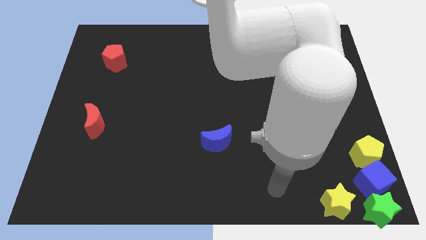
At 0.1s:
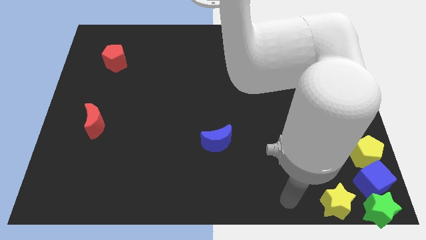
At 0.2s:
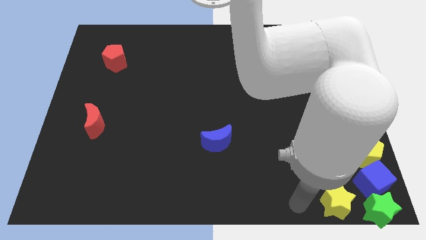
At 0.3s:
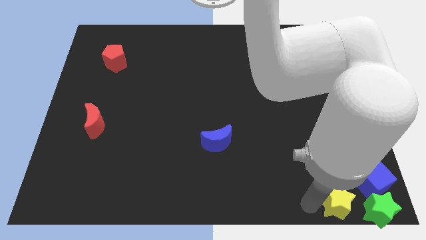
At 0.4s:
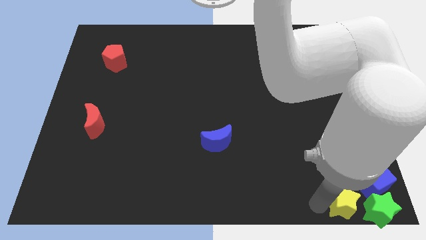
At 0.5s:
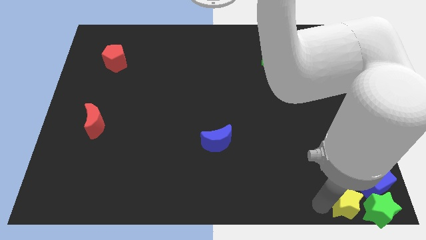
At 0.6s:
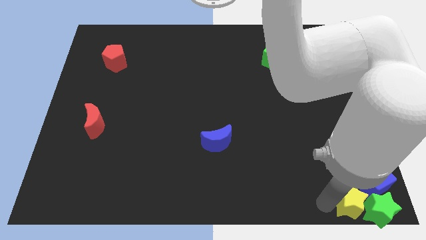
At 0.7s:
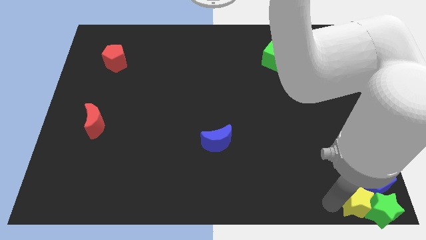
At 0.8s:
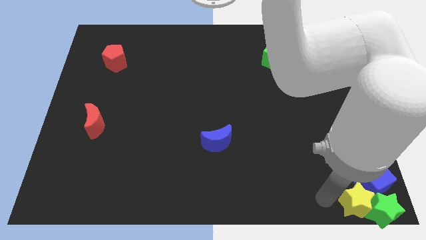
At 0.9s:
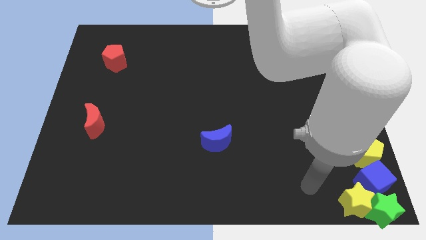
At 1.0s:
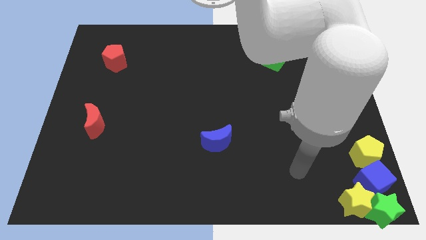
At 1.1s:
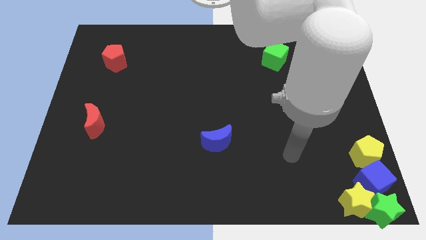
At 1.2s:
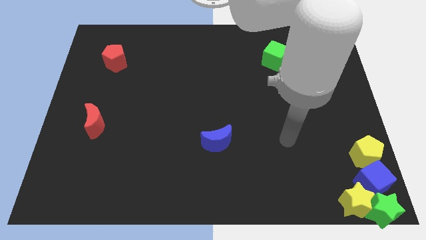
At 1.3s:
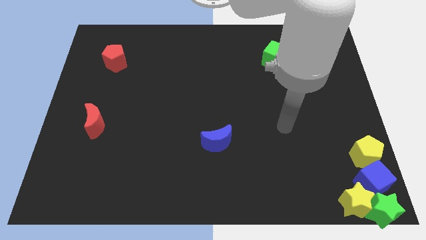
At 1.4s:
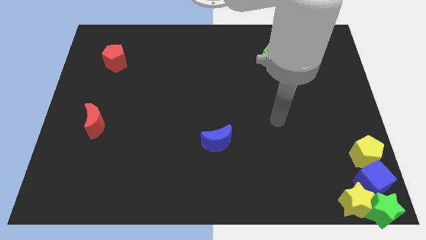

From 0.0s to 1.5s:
push the yellow star into the green star

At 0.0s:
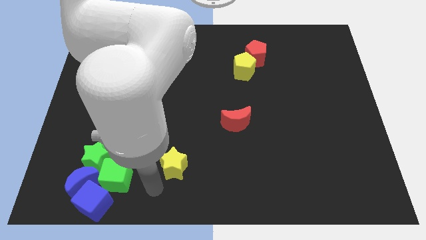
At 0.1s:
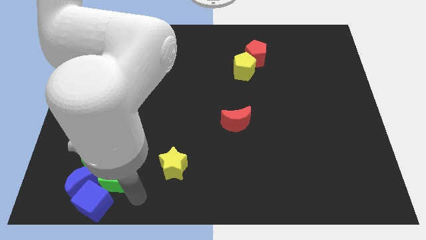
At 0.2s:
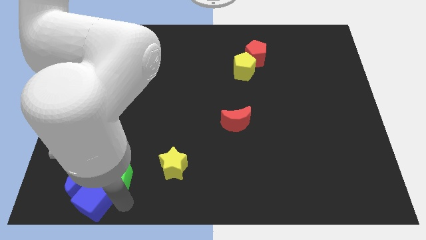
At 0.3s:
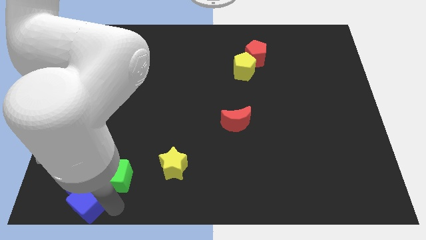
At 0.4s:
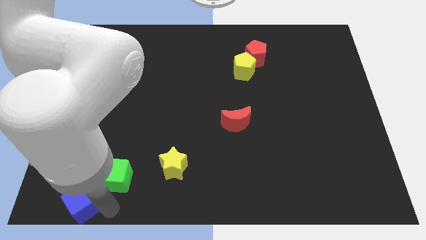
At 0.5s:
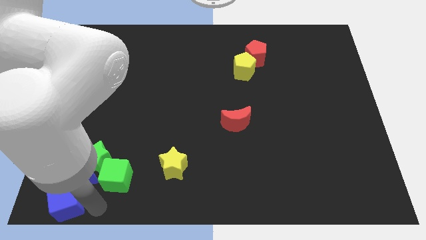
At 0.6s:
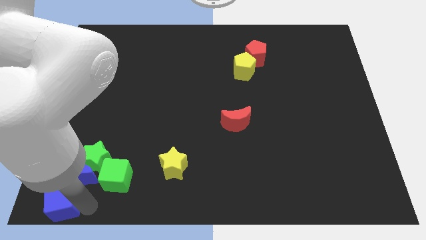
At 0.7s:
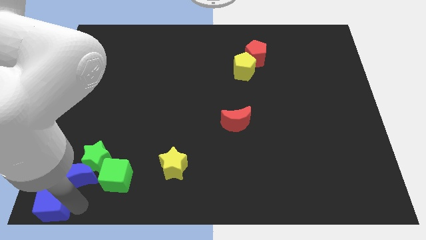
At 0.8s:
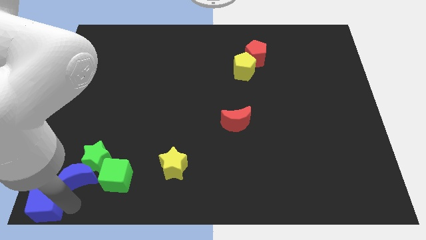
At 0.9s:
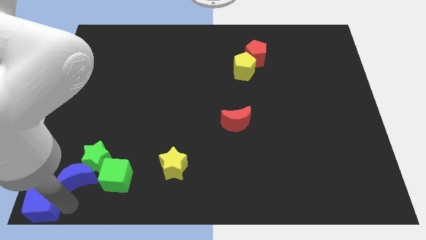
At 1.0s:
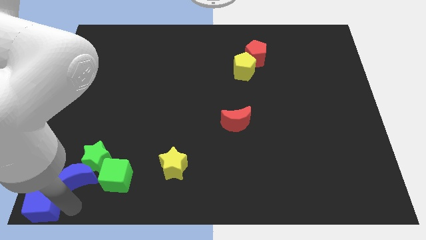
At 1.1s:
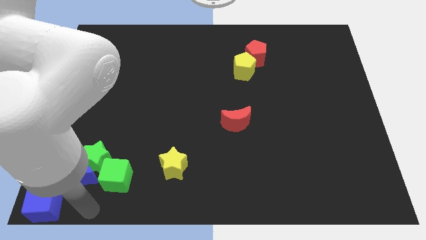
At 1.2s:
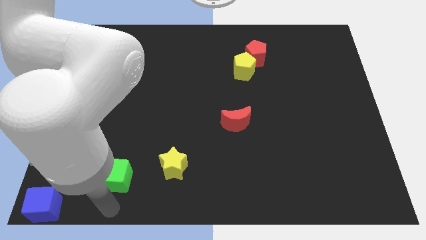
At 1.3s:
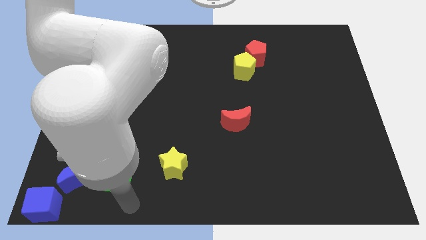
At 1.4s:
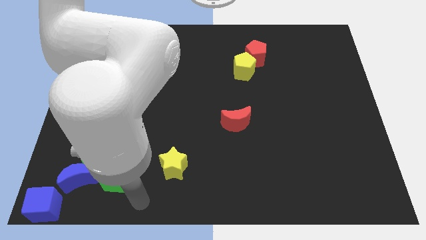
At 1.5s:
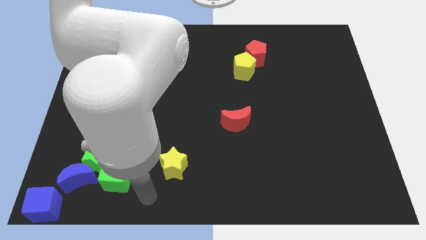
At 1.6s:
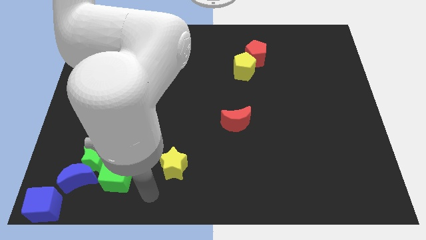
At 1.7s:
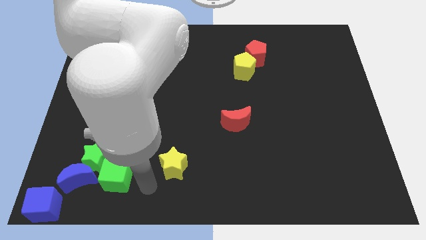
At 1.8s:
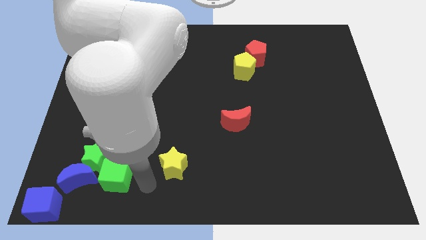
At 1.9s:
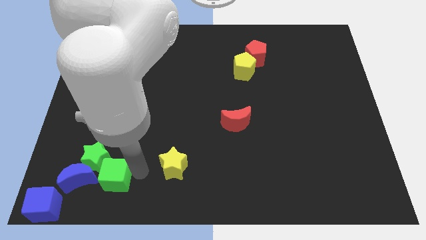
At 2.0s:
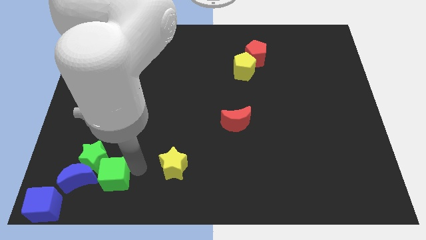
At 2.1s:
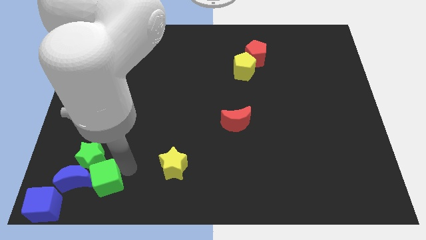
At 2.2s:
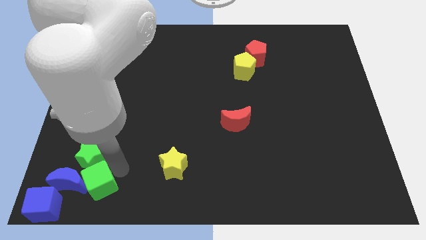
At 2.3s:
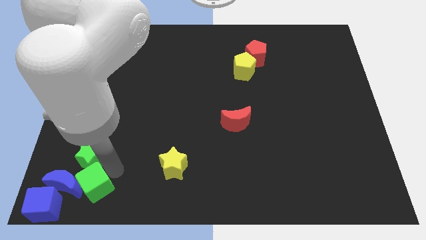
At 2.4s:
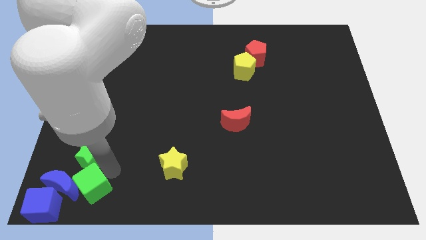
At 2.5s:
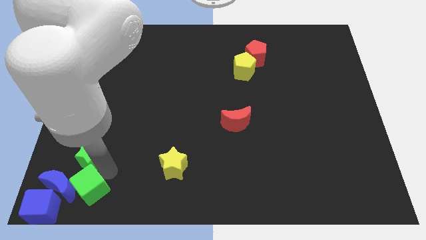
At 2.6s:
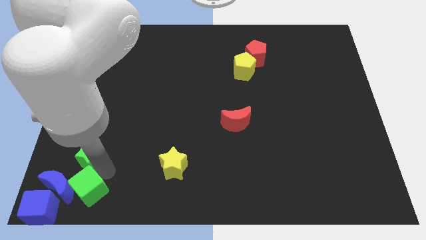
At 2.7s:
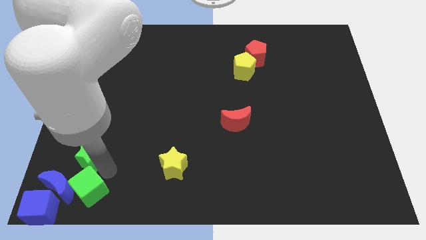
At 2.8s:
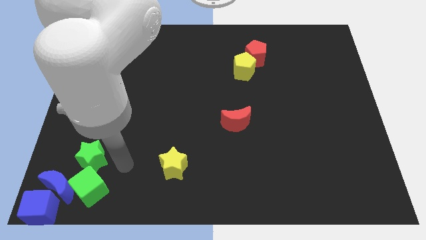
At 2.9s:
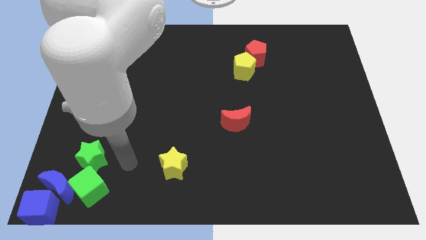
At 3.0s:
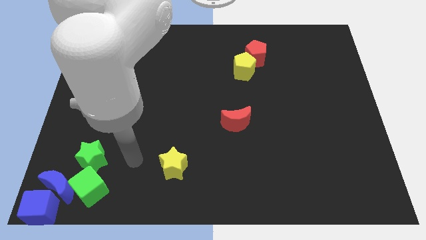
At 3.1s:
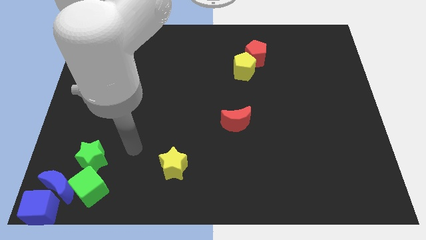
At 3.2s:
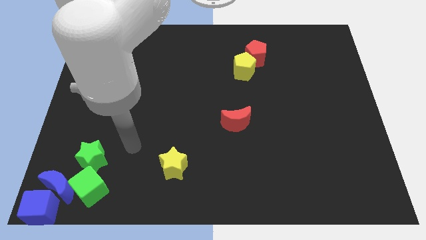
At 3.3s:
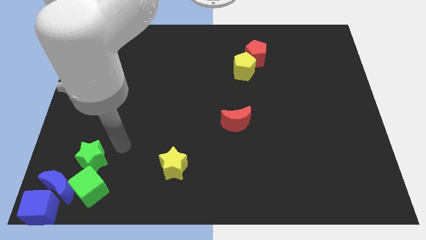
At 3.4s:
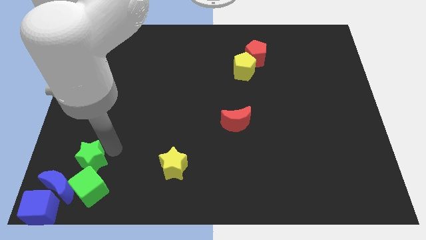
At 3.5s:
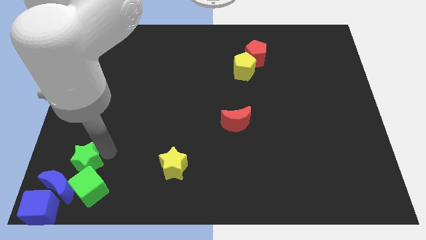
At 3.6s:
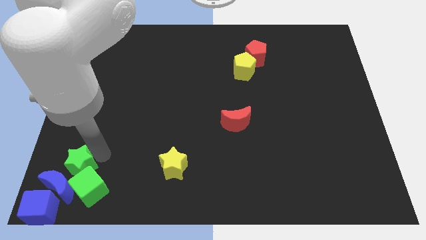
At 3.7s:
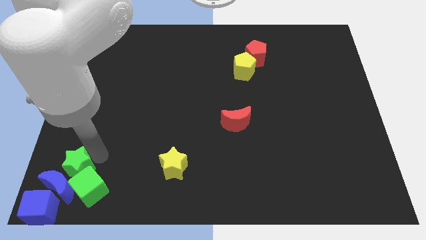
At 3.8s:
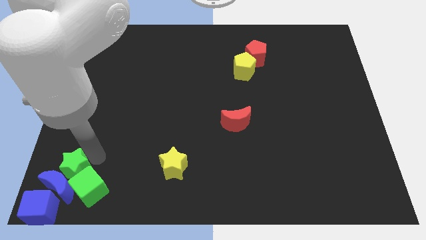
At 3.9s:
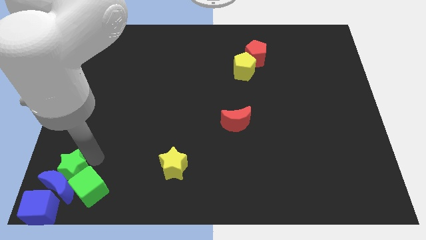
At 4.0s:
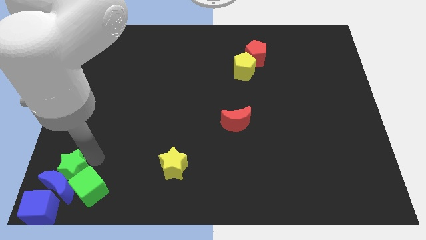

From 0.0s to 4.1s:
push the green and blue blocks to the bottom left corner

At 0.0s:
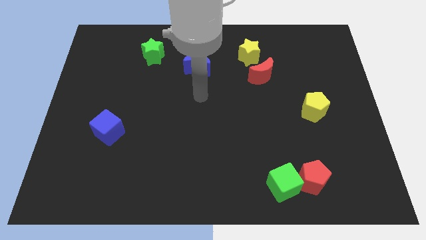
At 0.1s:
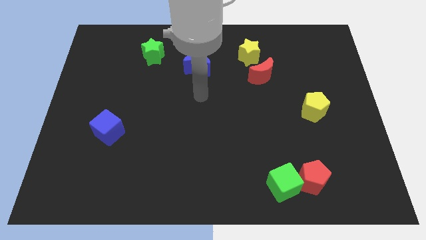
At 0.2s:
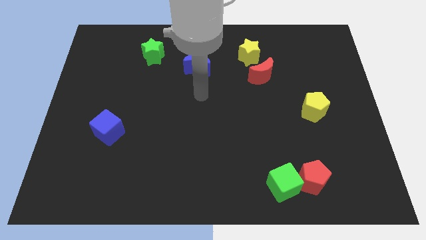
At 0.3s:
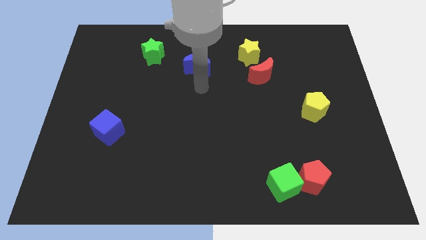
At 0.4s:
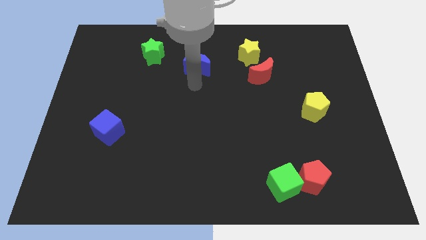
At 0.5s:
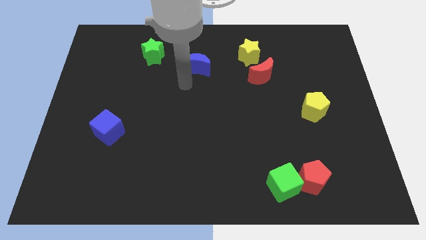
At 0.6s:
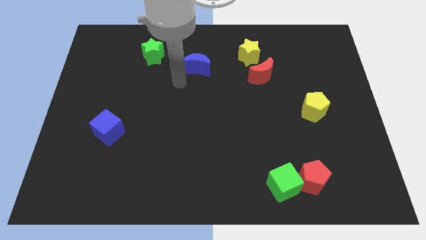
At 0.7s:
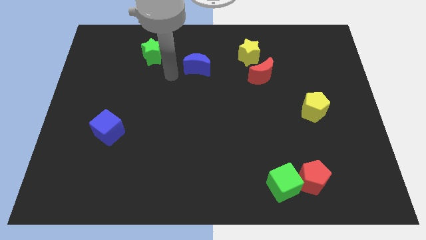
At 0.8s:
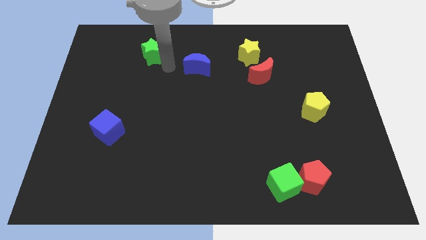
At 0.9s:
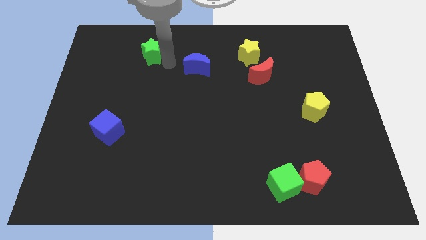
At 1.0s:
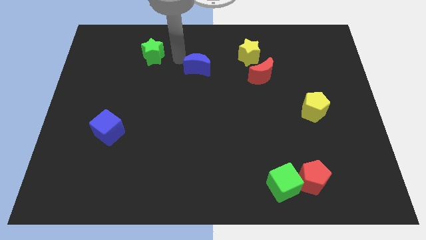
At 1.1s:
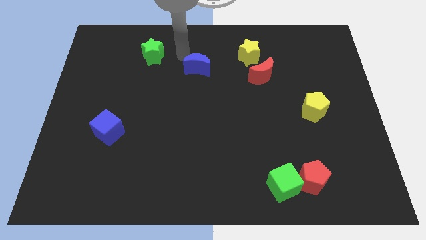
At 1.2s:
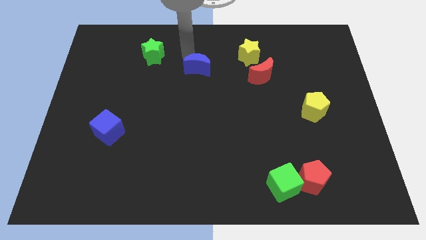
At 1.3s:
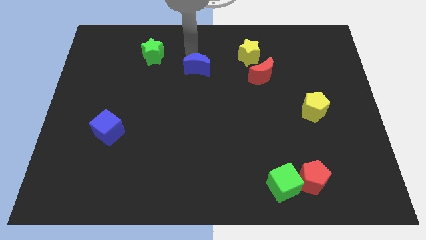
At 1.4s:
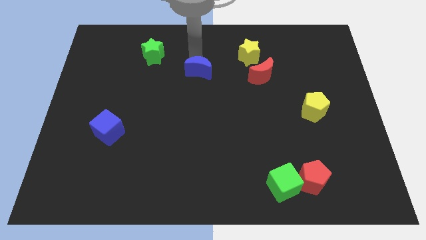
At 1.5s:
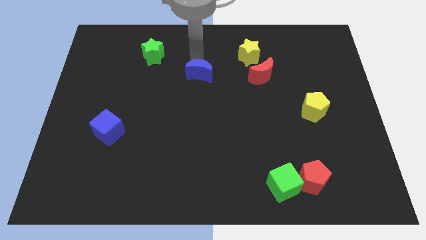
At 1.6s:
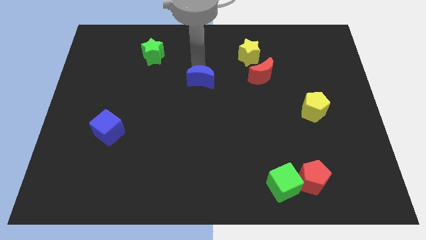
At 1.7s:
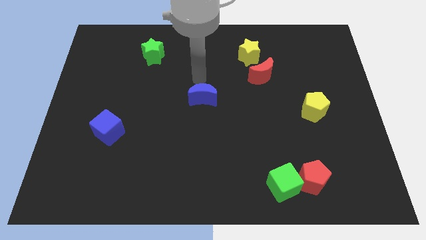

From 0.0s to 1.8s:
move the blue crescent to the bottom of the board

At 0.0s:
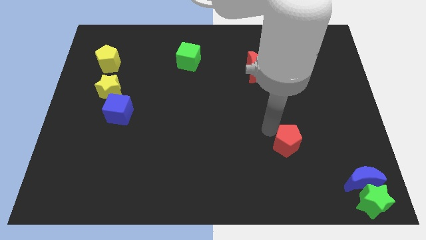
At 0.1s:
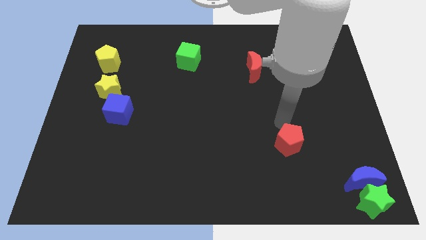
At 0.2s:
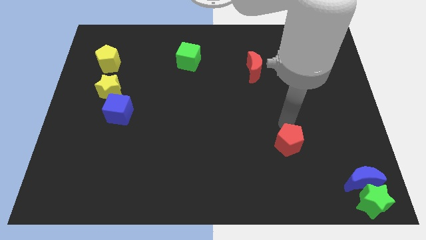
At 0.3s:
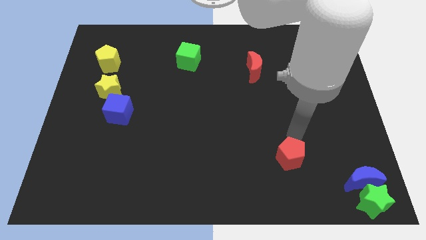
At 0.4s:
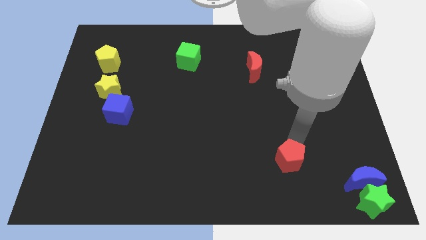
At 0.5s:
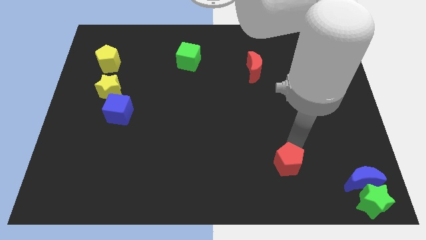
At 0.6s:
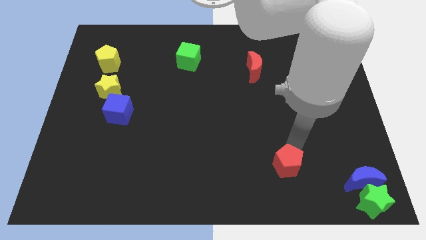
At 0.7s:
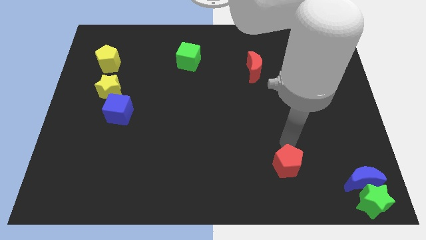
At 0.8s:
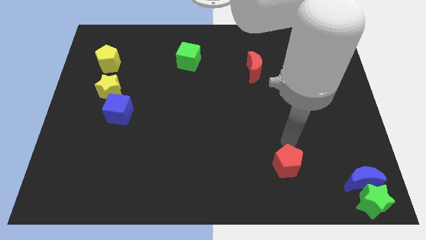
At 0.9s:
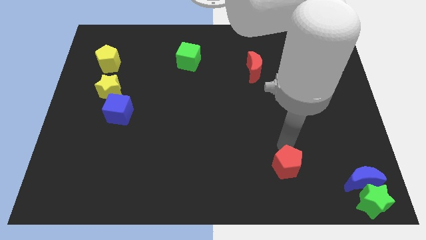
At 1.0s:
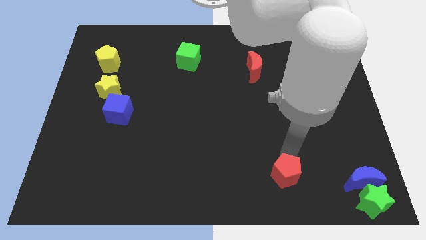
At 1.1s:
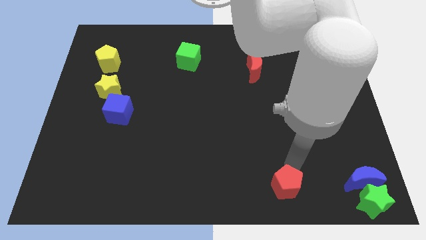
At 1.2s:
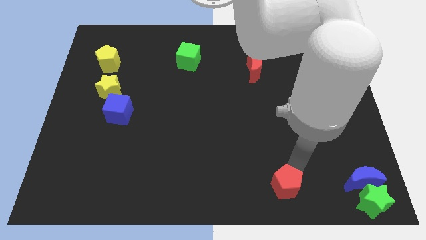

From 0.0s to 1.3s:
place red pentagon to the left of blue moon

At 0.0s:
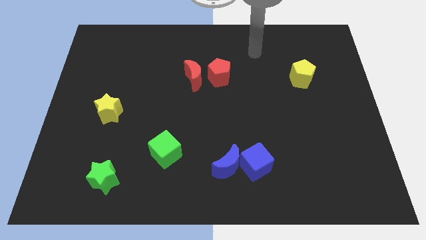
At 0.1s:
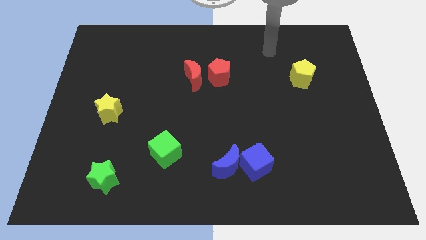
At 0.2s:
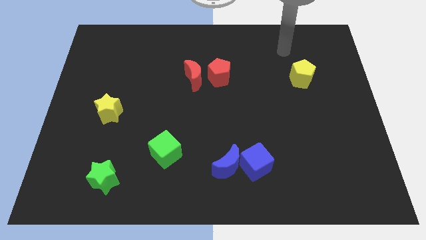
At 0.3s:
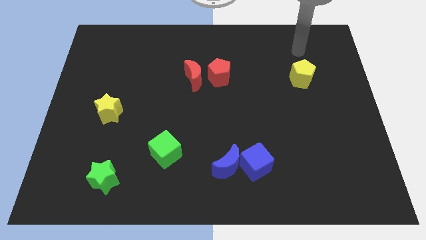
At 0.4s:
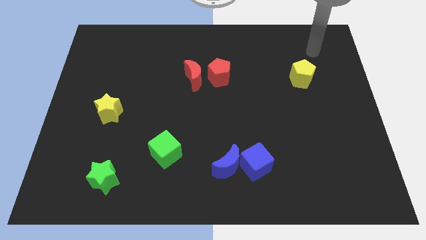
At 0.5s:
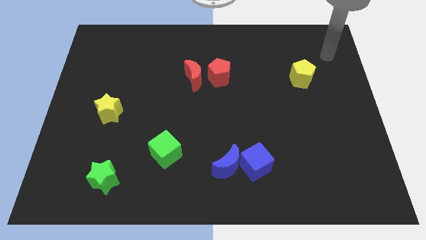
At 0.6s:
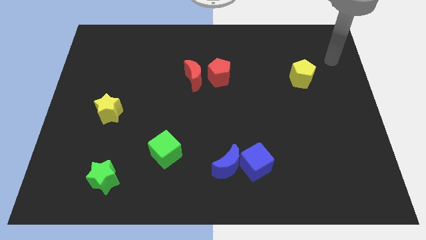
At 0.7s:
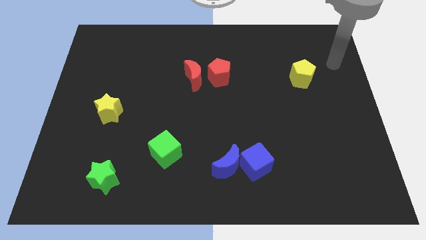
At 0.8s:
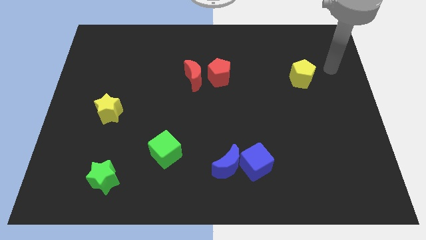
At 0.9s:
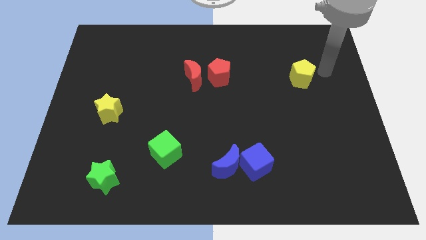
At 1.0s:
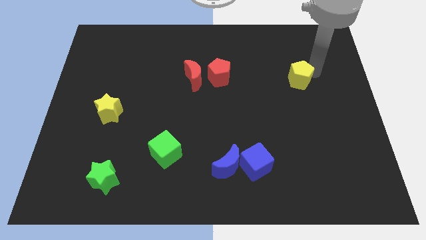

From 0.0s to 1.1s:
move arm near yellow pentagon
